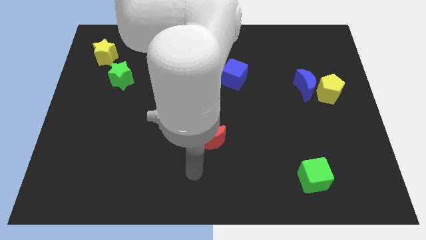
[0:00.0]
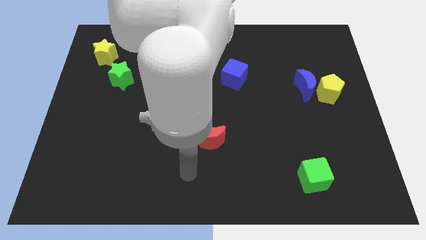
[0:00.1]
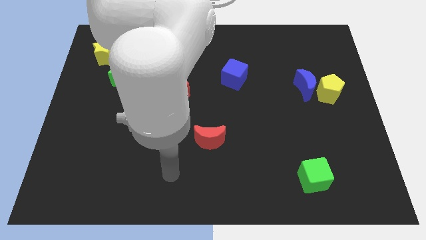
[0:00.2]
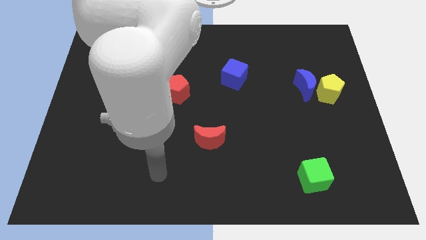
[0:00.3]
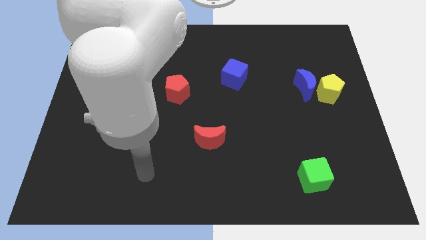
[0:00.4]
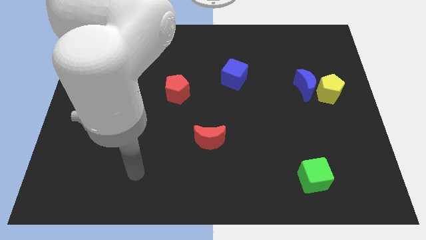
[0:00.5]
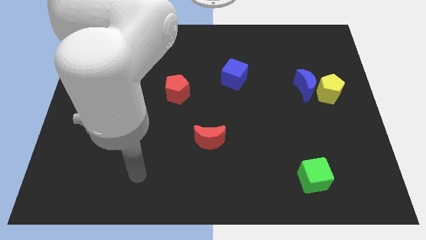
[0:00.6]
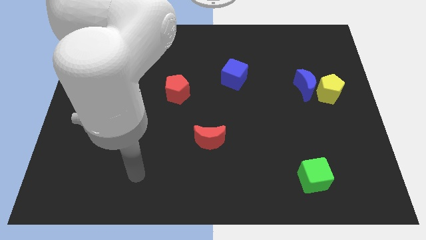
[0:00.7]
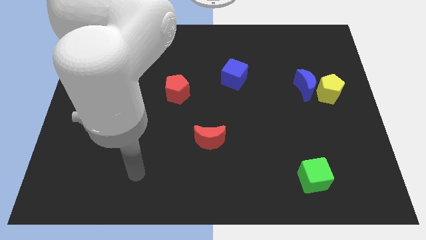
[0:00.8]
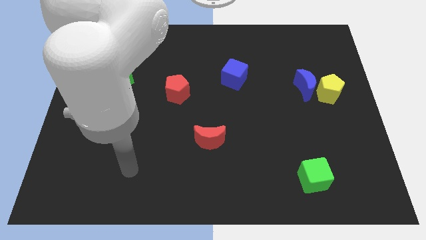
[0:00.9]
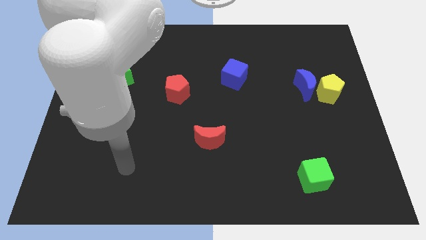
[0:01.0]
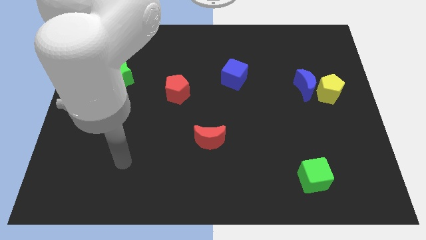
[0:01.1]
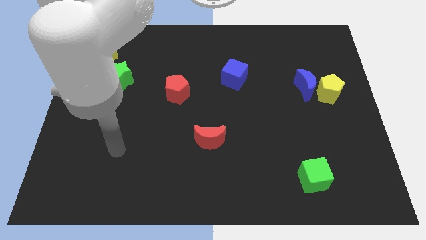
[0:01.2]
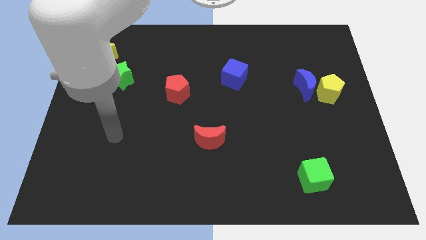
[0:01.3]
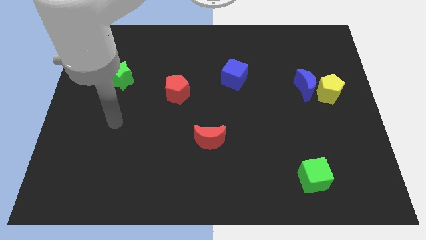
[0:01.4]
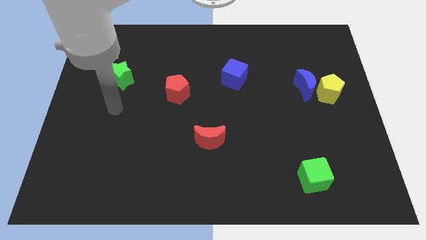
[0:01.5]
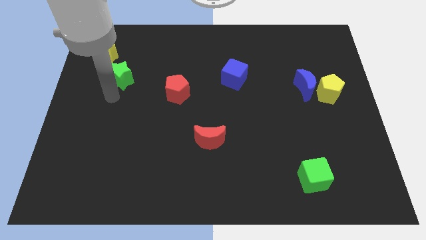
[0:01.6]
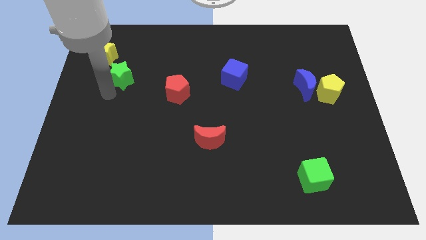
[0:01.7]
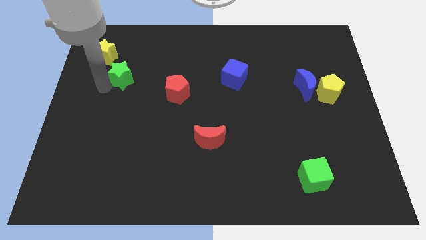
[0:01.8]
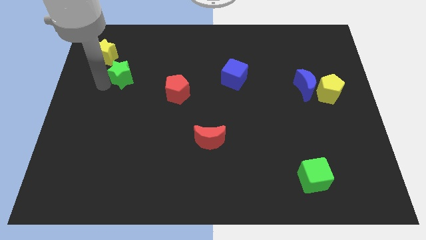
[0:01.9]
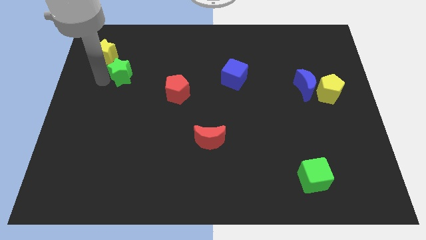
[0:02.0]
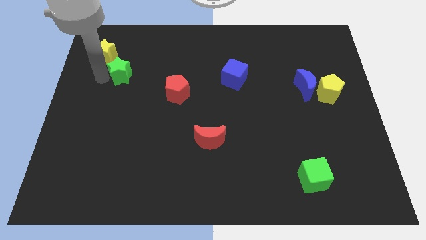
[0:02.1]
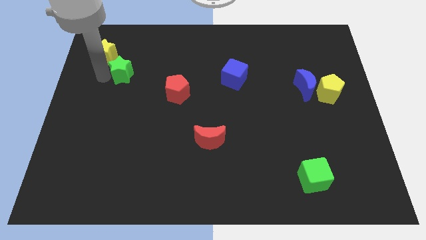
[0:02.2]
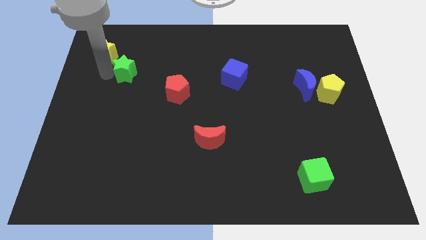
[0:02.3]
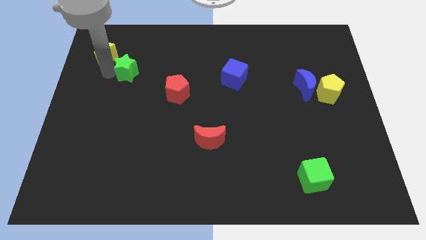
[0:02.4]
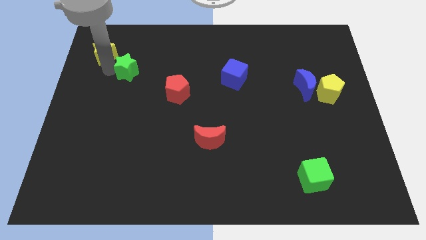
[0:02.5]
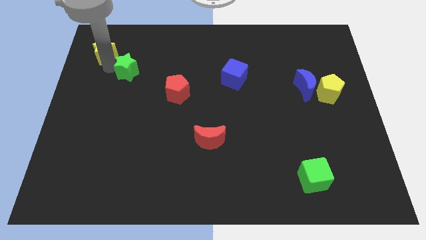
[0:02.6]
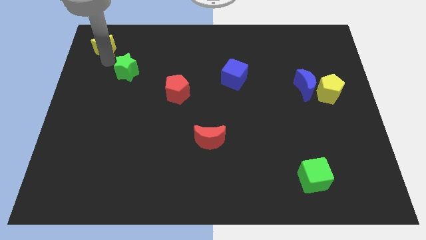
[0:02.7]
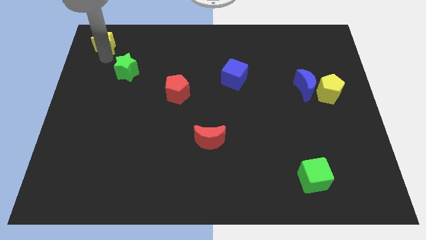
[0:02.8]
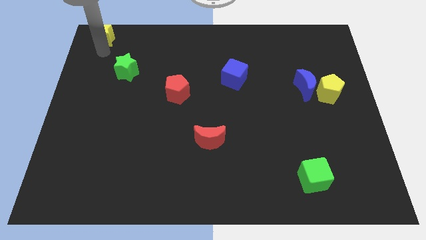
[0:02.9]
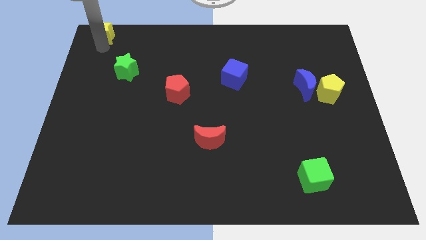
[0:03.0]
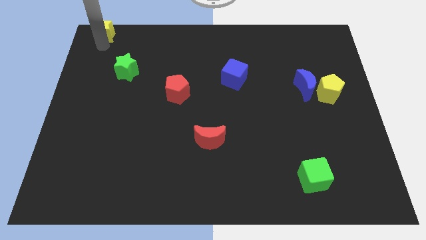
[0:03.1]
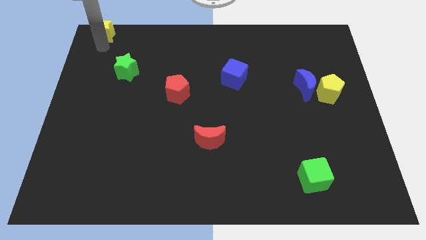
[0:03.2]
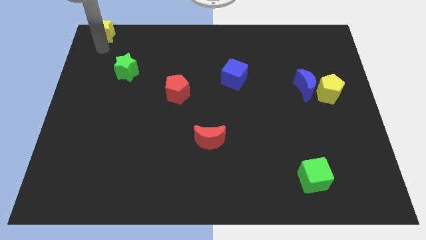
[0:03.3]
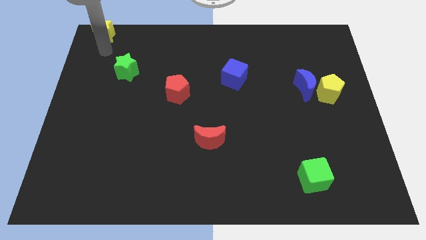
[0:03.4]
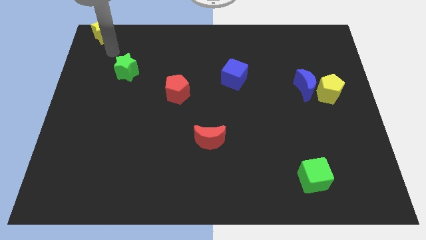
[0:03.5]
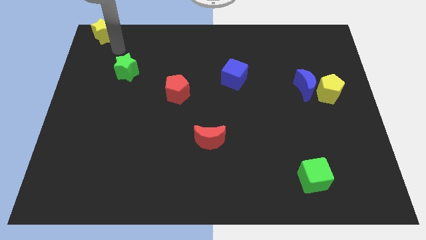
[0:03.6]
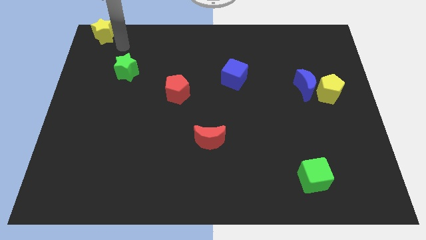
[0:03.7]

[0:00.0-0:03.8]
push yellow star away from the green star

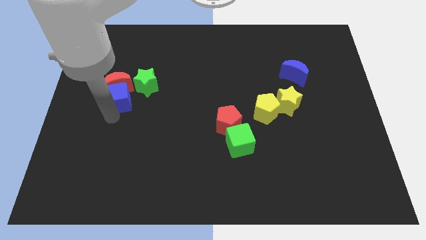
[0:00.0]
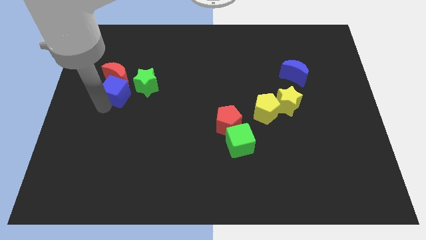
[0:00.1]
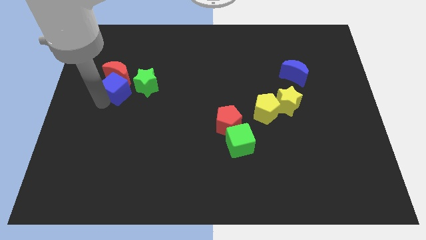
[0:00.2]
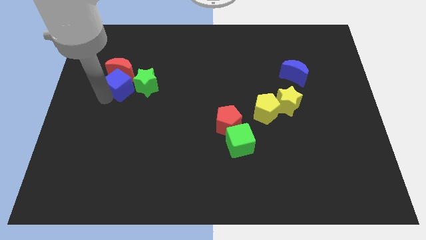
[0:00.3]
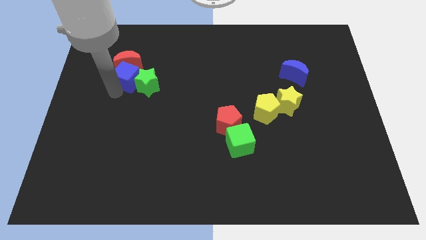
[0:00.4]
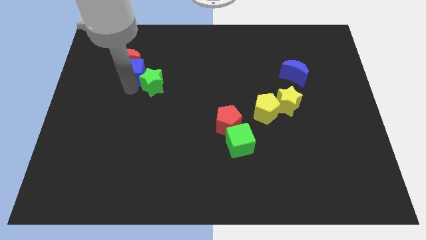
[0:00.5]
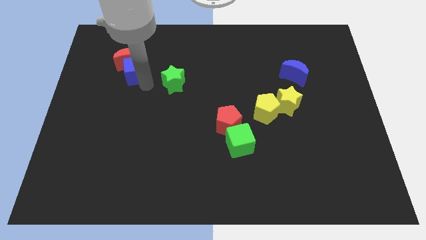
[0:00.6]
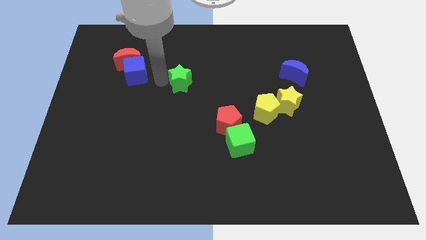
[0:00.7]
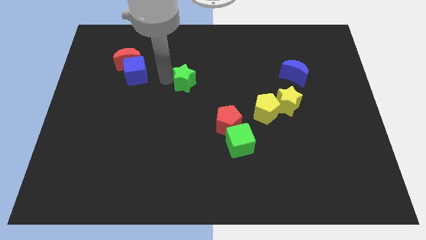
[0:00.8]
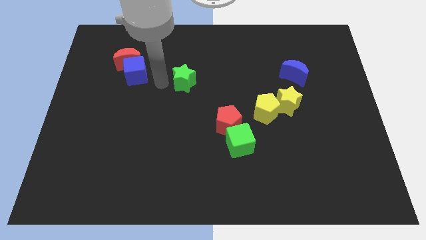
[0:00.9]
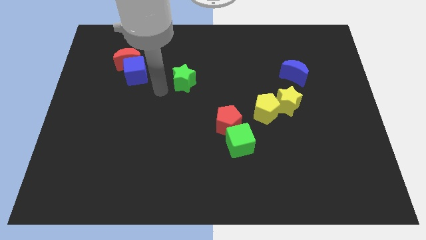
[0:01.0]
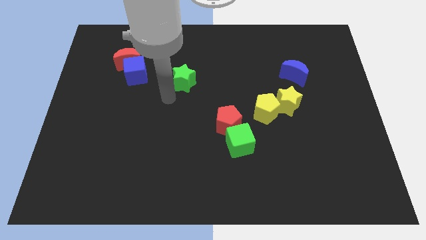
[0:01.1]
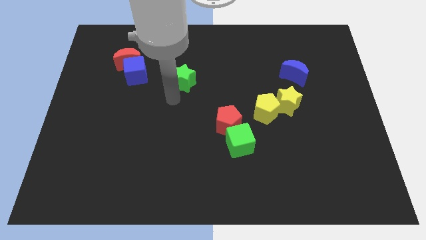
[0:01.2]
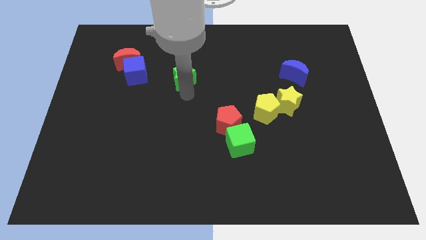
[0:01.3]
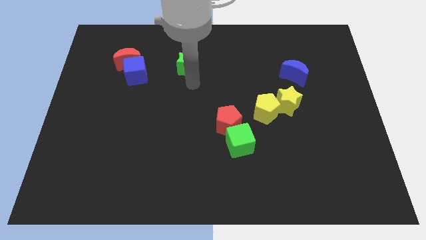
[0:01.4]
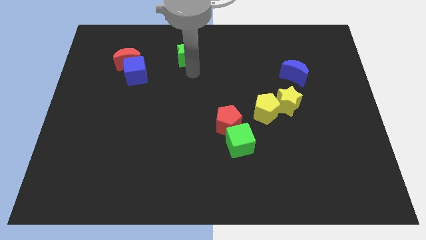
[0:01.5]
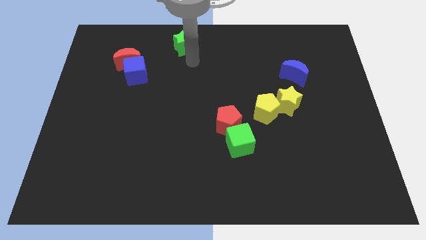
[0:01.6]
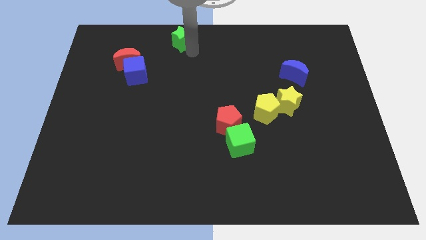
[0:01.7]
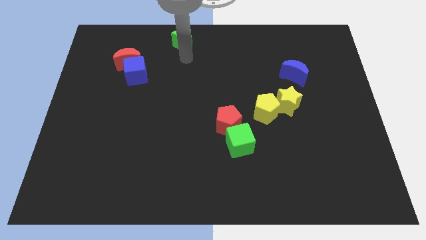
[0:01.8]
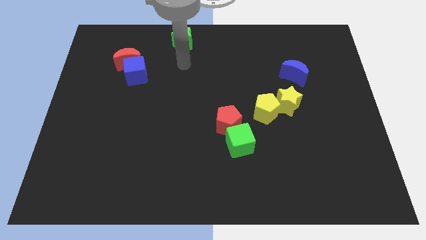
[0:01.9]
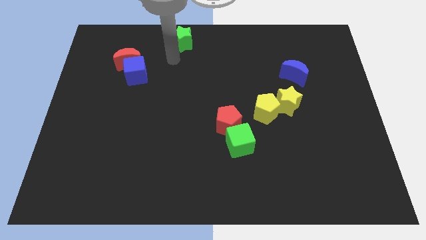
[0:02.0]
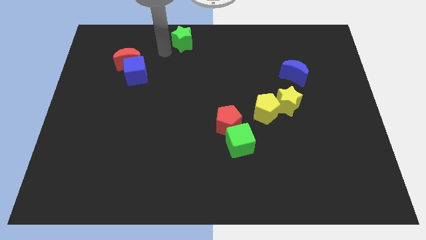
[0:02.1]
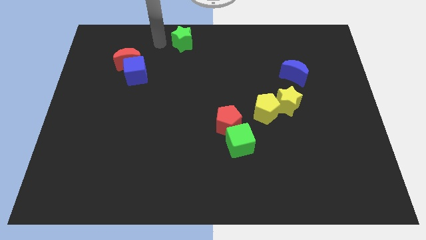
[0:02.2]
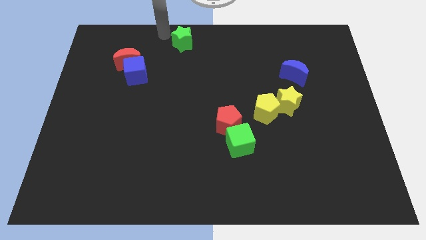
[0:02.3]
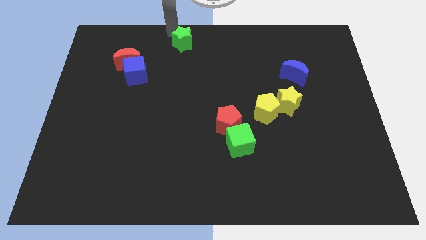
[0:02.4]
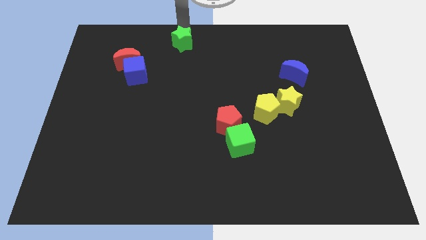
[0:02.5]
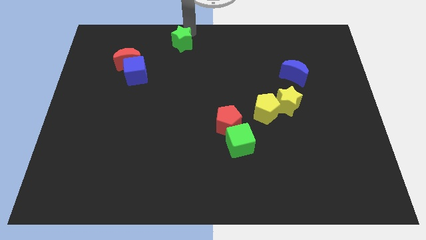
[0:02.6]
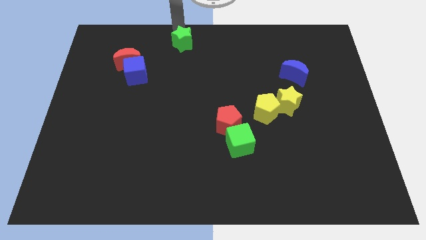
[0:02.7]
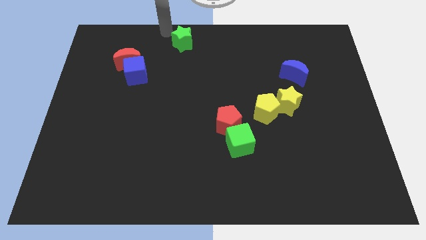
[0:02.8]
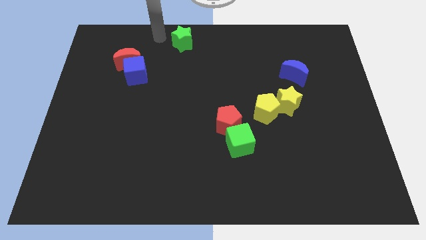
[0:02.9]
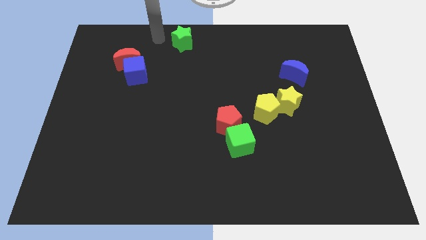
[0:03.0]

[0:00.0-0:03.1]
move green star to the top left side

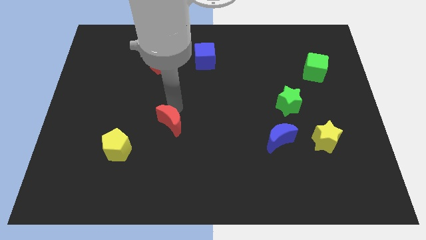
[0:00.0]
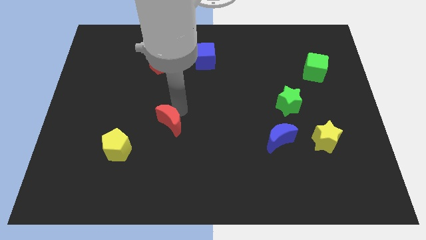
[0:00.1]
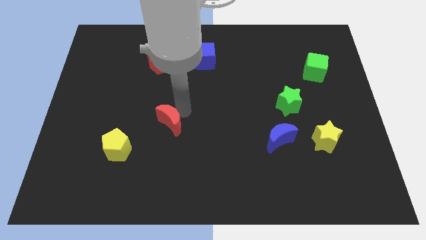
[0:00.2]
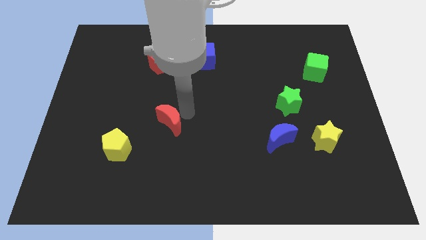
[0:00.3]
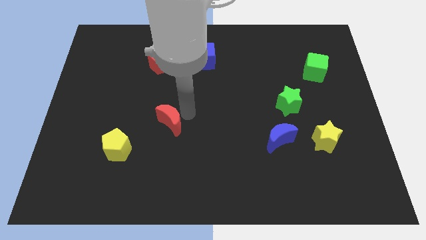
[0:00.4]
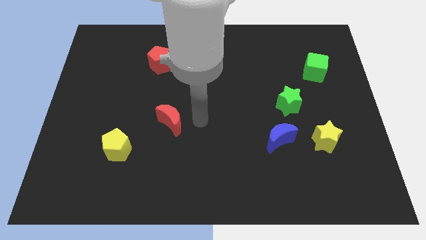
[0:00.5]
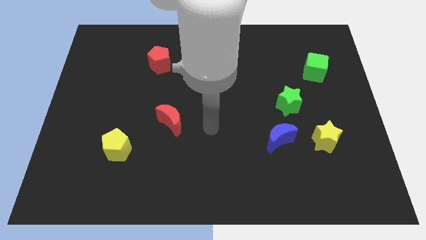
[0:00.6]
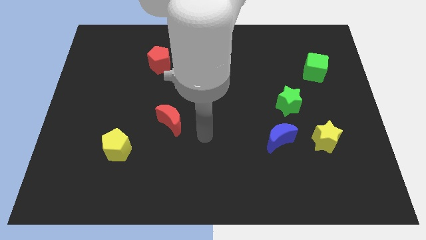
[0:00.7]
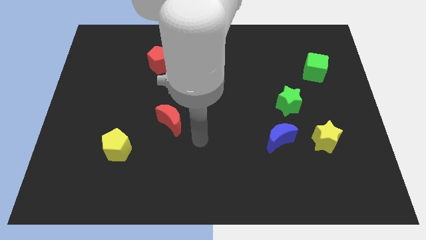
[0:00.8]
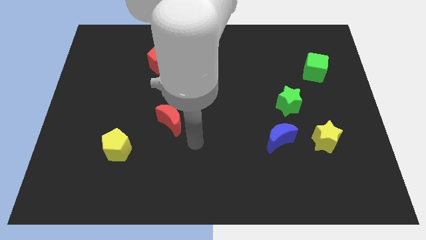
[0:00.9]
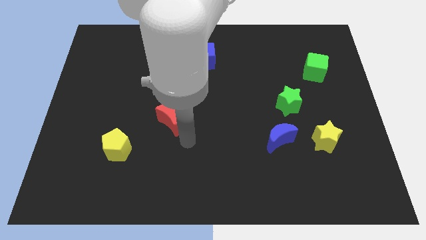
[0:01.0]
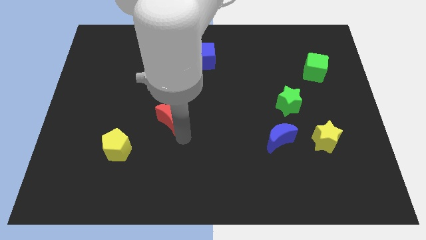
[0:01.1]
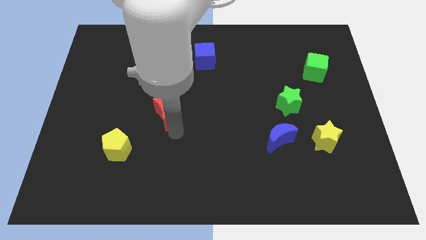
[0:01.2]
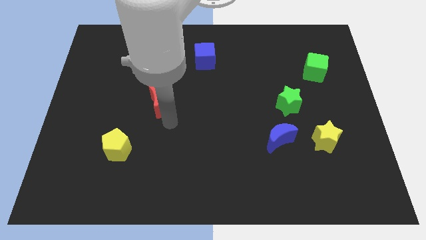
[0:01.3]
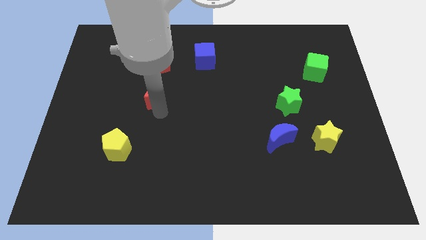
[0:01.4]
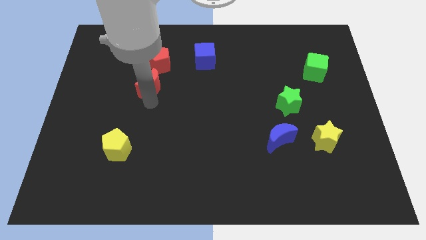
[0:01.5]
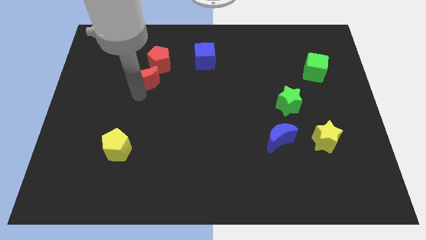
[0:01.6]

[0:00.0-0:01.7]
push the red moon towards the red pentagon

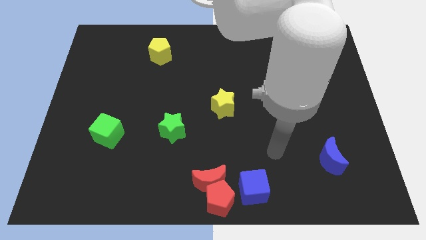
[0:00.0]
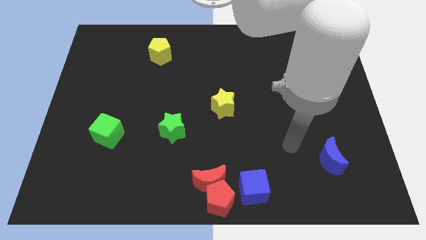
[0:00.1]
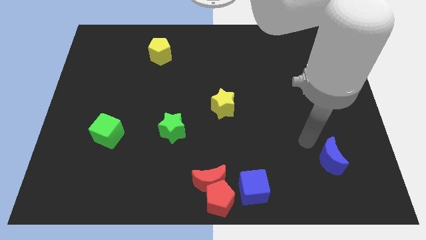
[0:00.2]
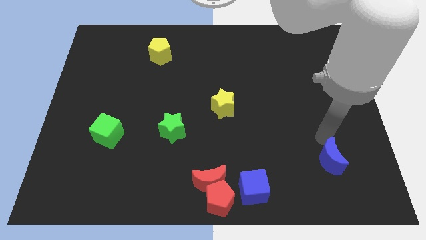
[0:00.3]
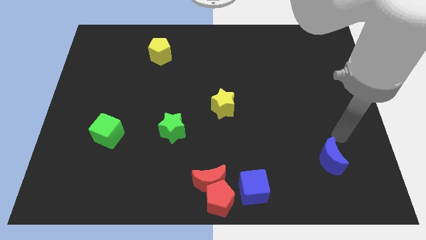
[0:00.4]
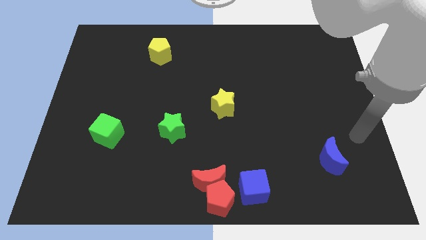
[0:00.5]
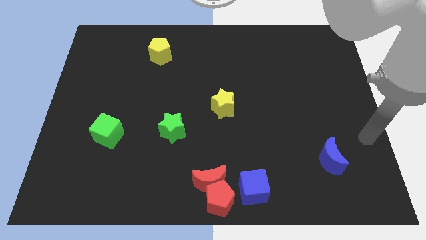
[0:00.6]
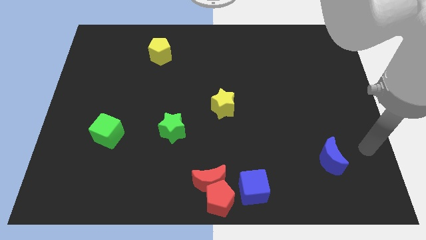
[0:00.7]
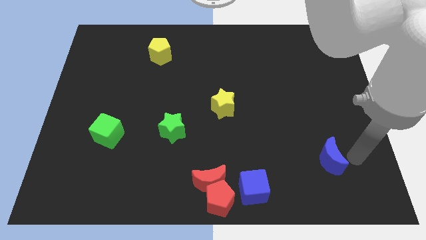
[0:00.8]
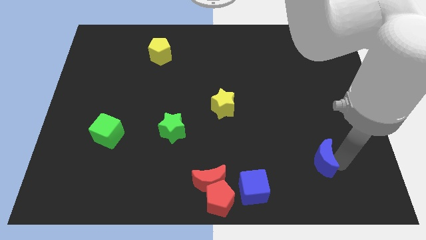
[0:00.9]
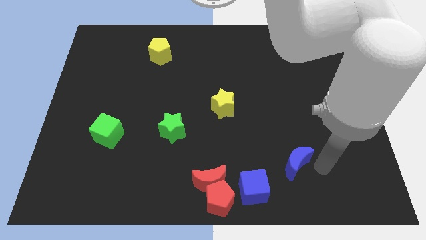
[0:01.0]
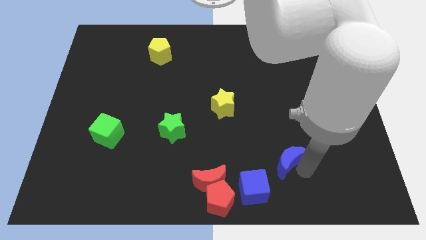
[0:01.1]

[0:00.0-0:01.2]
push the blue moon closer to the blue cube
